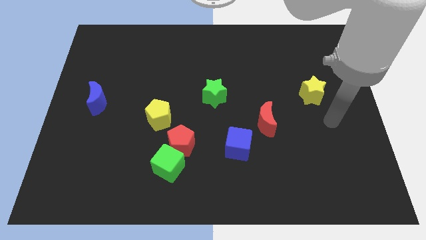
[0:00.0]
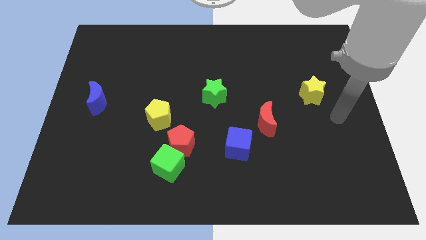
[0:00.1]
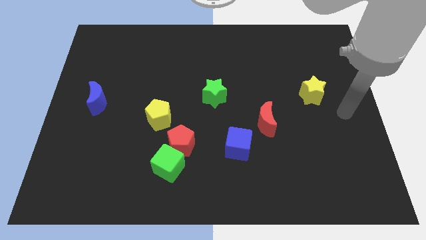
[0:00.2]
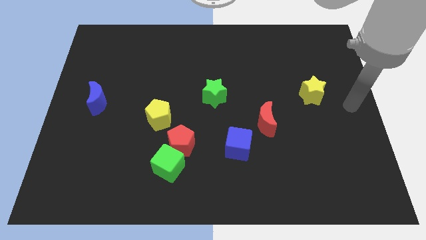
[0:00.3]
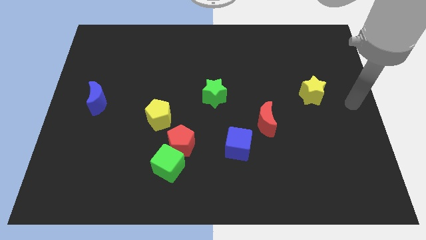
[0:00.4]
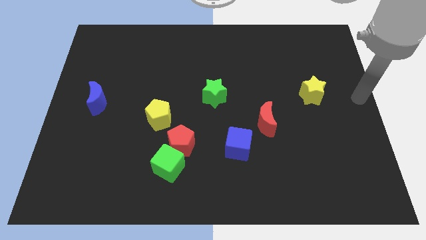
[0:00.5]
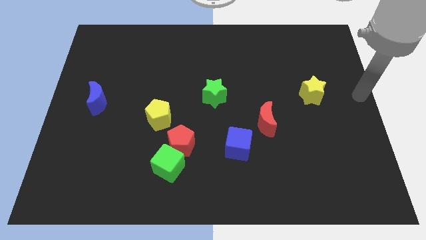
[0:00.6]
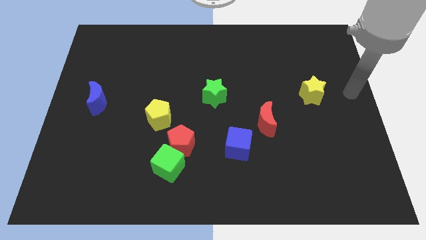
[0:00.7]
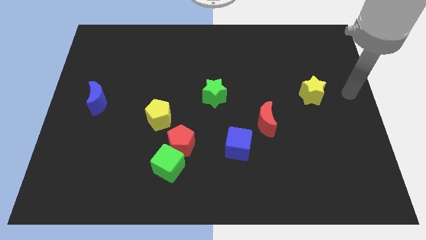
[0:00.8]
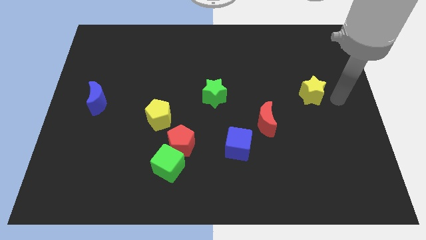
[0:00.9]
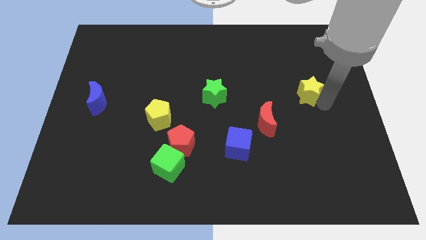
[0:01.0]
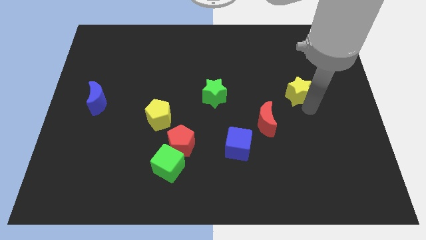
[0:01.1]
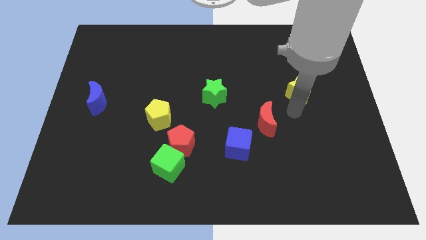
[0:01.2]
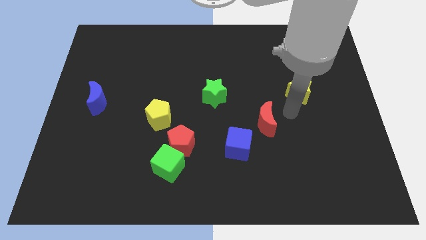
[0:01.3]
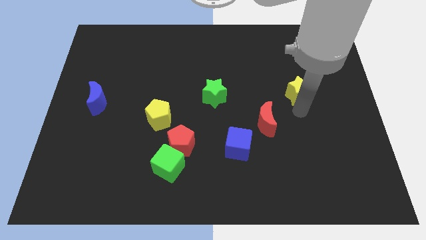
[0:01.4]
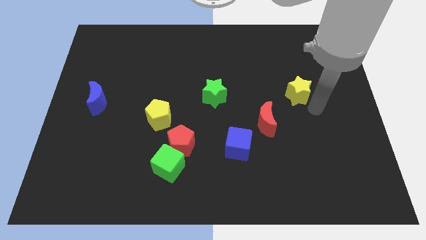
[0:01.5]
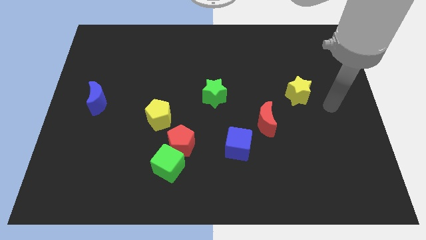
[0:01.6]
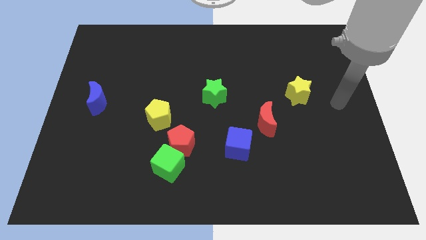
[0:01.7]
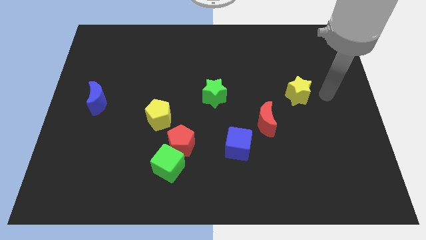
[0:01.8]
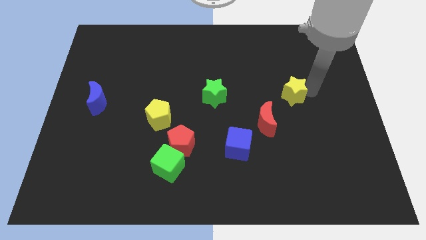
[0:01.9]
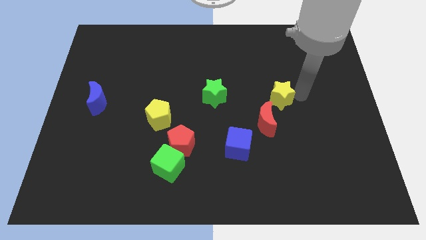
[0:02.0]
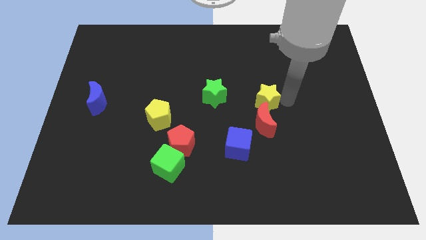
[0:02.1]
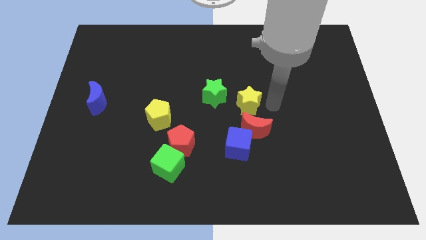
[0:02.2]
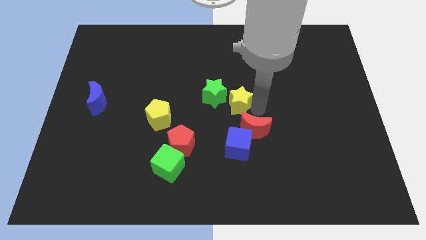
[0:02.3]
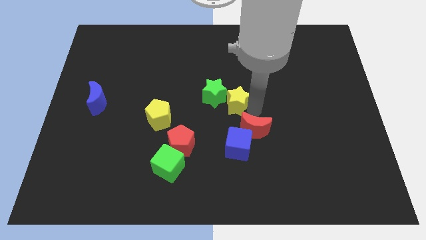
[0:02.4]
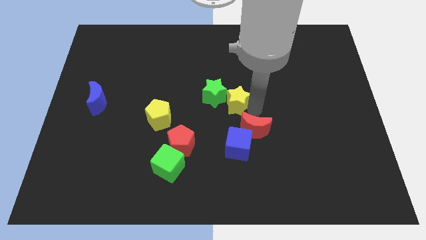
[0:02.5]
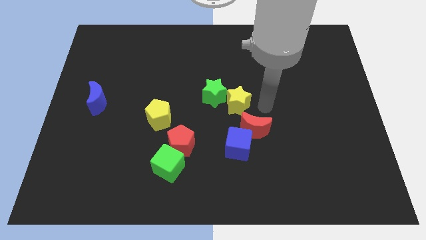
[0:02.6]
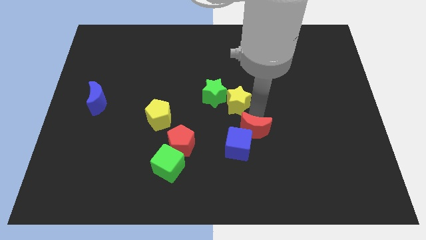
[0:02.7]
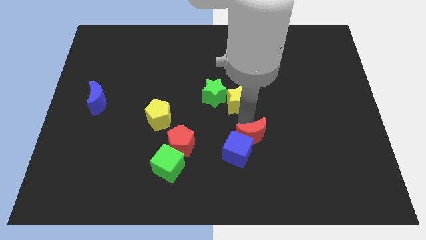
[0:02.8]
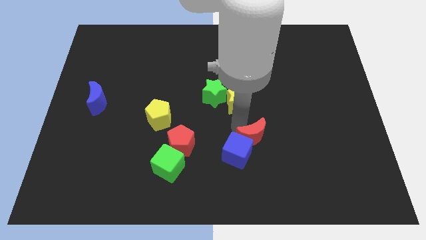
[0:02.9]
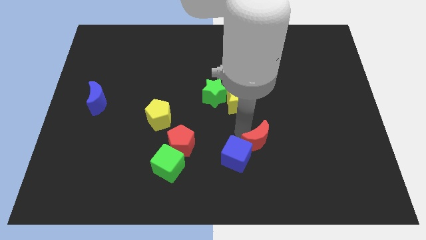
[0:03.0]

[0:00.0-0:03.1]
push the yellow star into the right side of the green star

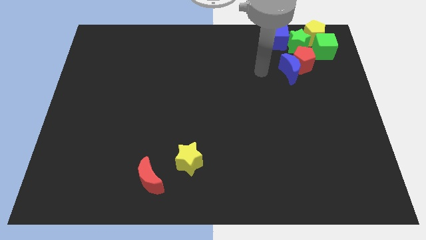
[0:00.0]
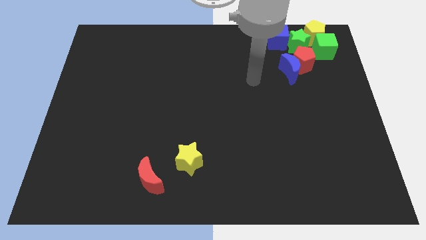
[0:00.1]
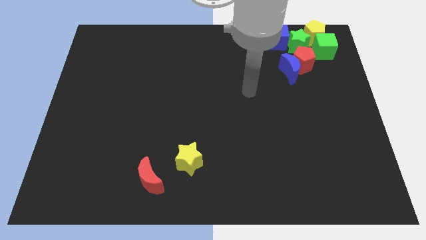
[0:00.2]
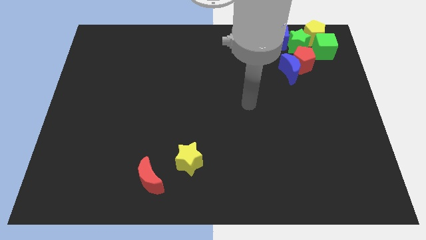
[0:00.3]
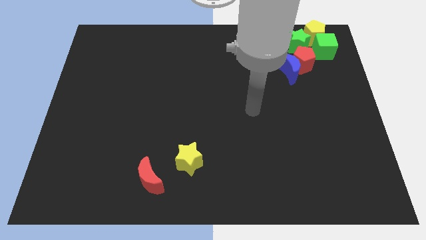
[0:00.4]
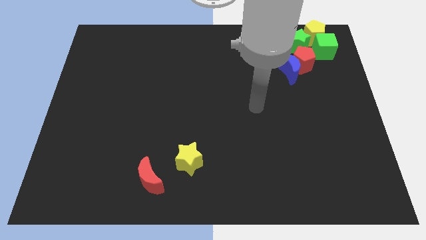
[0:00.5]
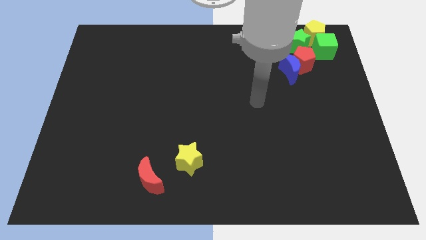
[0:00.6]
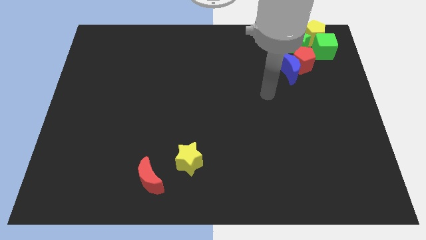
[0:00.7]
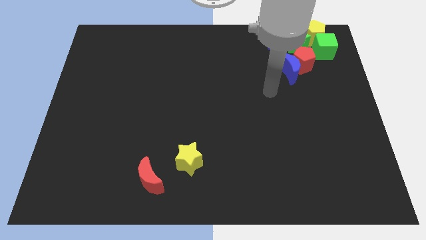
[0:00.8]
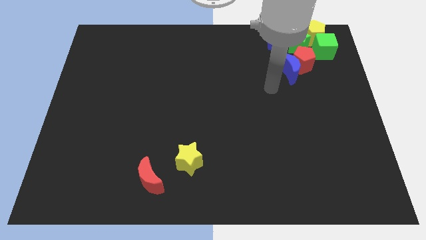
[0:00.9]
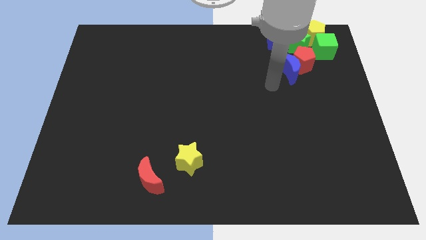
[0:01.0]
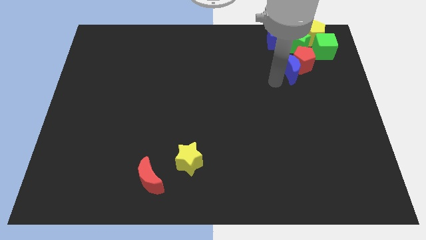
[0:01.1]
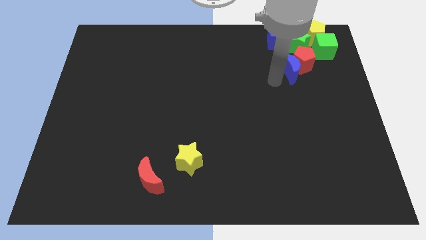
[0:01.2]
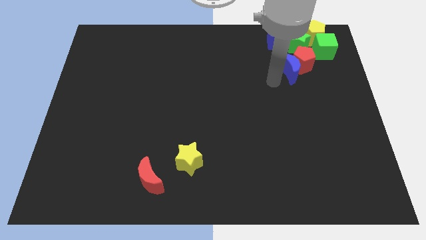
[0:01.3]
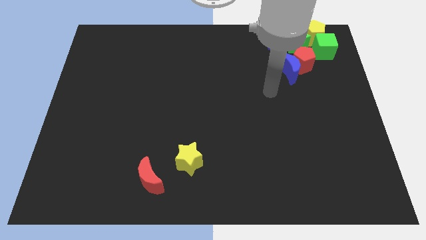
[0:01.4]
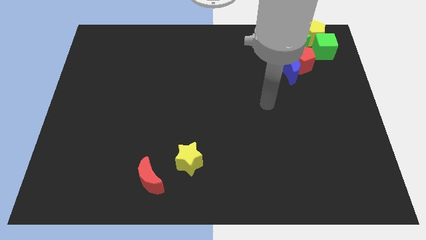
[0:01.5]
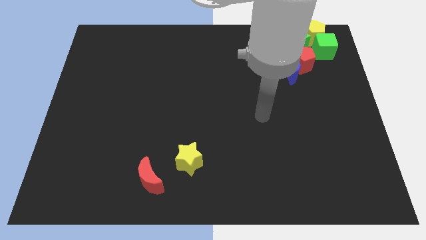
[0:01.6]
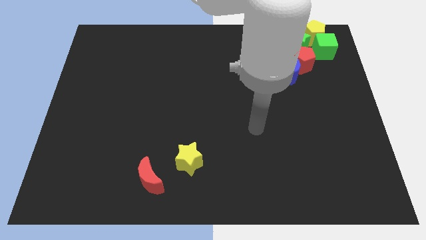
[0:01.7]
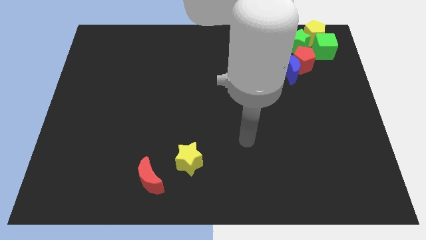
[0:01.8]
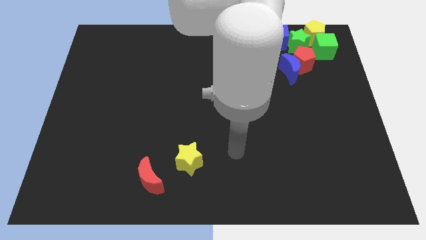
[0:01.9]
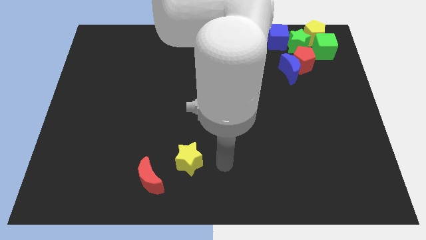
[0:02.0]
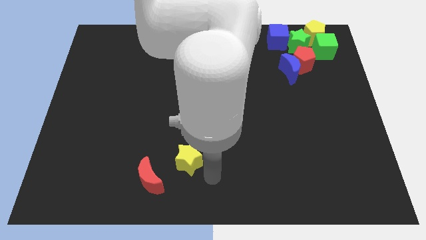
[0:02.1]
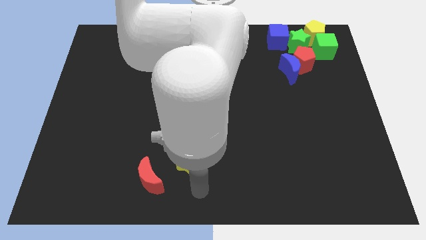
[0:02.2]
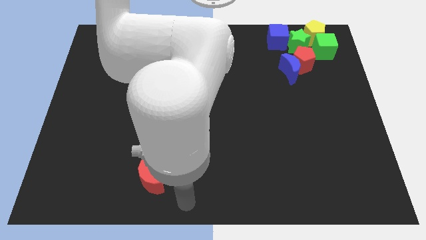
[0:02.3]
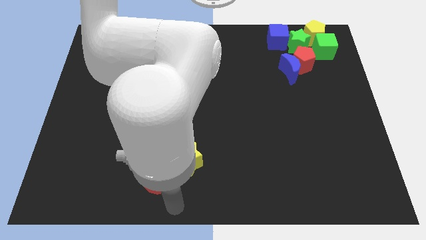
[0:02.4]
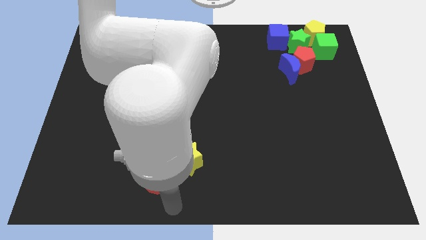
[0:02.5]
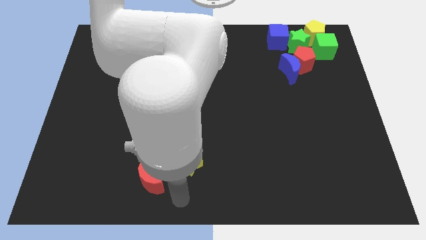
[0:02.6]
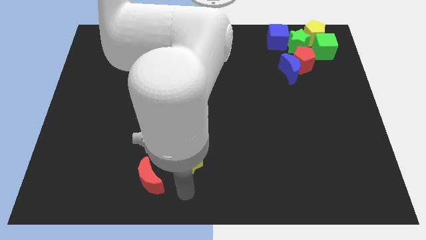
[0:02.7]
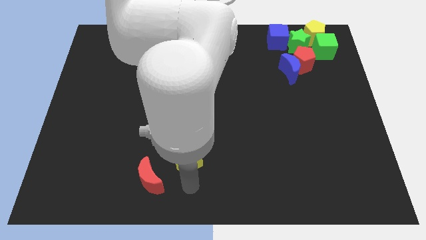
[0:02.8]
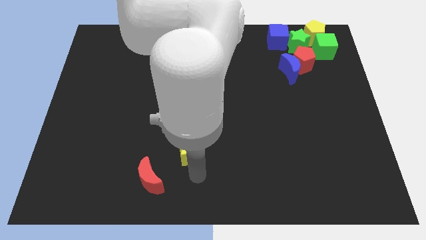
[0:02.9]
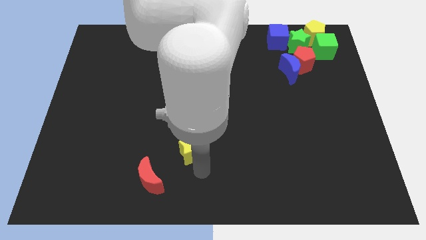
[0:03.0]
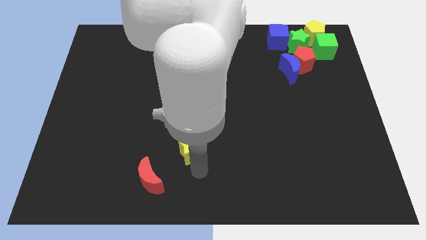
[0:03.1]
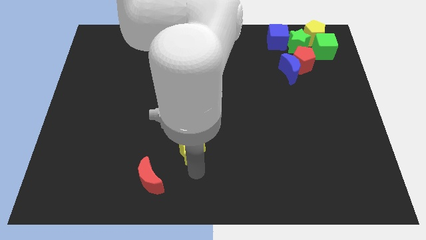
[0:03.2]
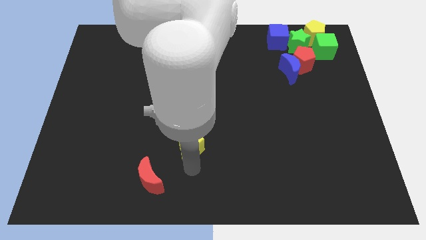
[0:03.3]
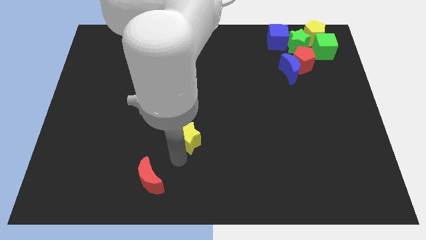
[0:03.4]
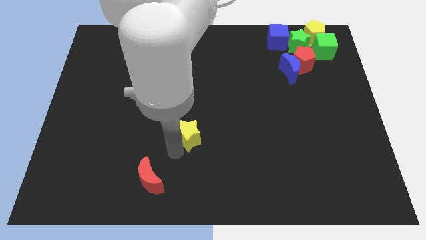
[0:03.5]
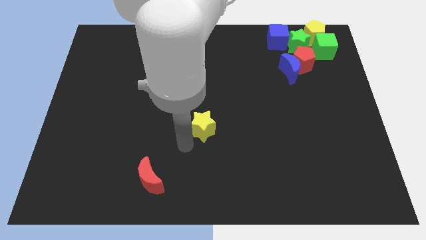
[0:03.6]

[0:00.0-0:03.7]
drag the yellow star slightly to the top side of the board

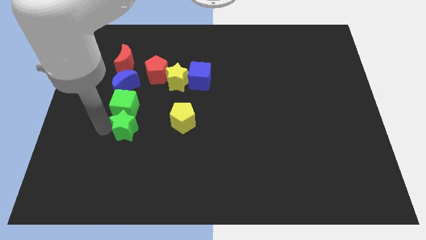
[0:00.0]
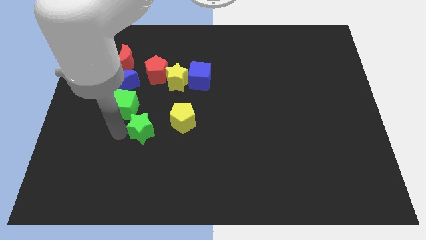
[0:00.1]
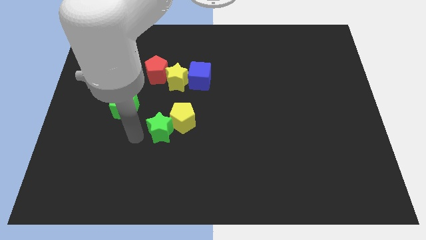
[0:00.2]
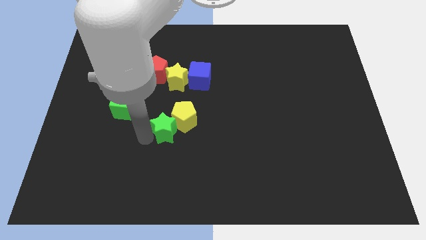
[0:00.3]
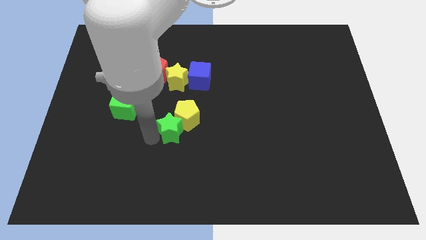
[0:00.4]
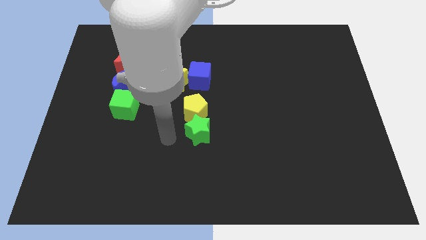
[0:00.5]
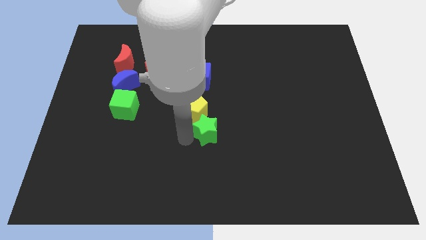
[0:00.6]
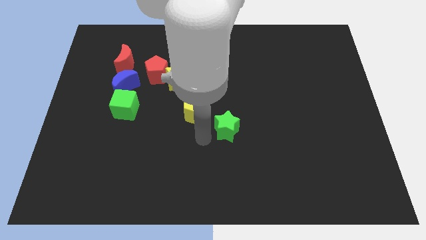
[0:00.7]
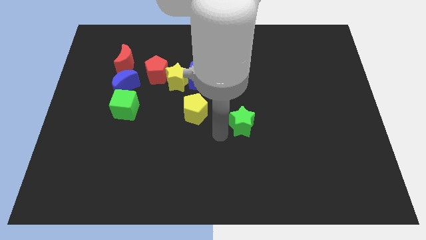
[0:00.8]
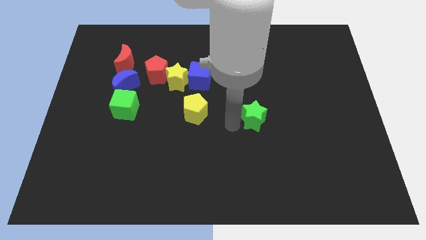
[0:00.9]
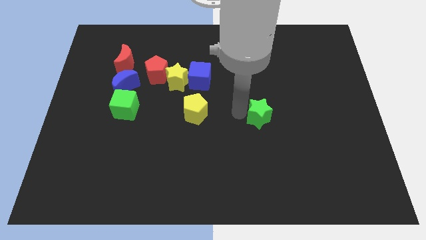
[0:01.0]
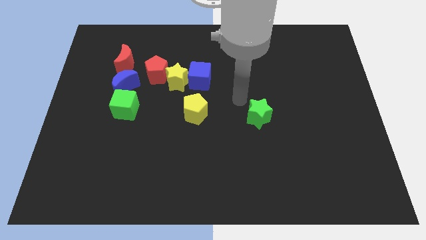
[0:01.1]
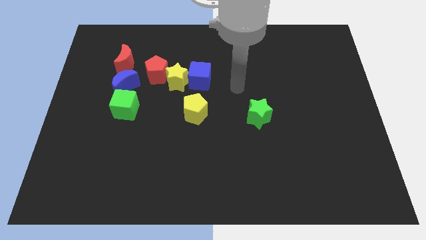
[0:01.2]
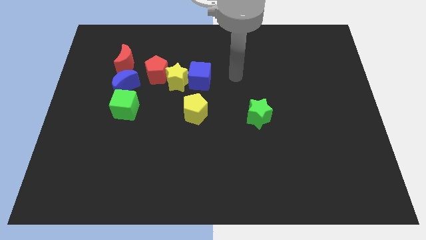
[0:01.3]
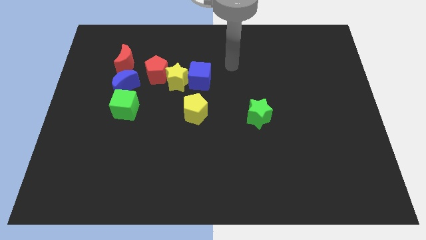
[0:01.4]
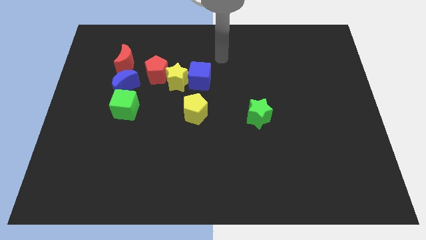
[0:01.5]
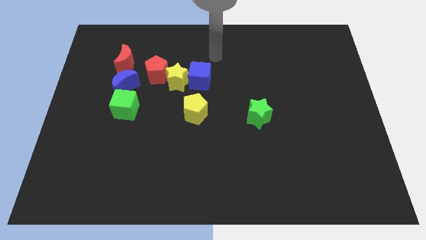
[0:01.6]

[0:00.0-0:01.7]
place green star slightly towards center

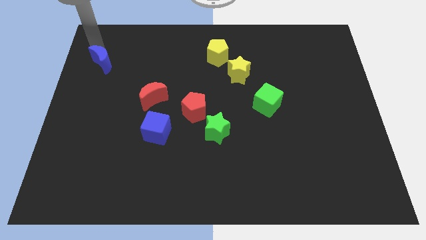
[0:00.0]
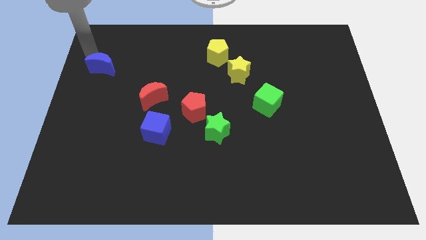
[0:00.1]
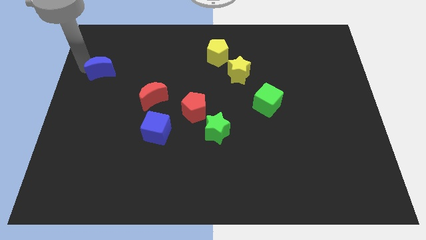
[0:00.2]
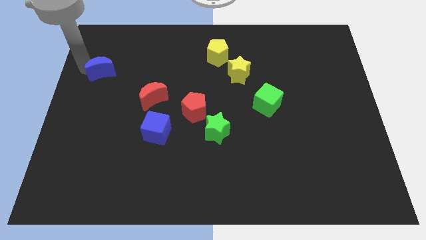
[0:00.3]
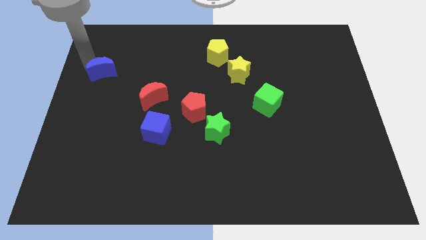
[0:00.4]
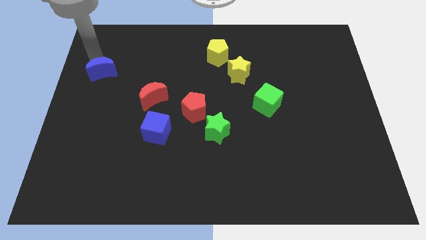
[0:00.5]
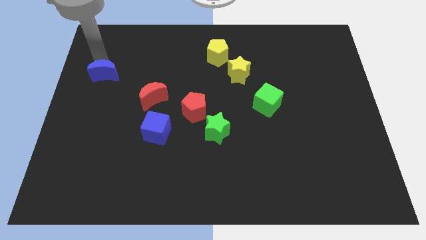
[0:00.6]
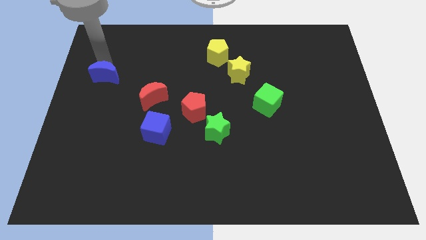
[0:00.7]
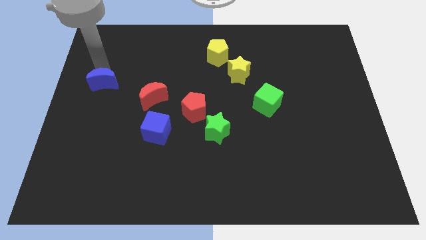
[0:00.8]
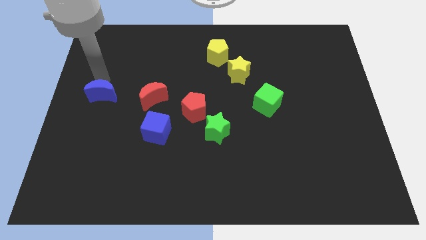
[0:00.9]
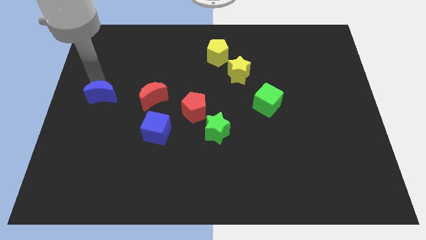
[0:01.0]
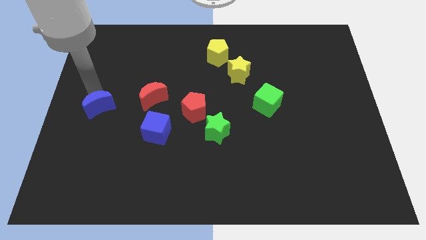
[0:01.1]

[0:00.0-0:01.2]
place the blue crescent parallel to red crescent
